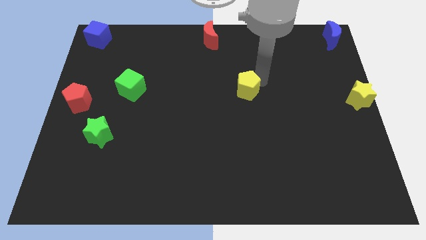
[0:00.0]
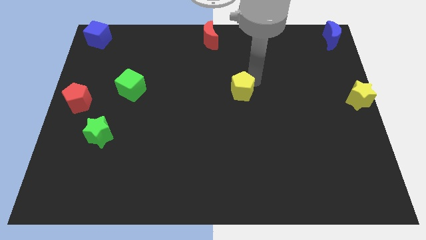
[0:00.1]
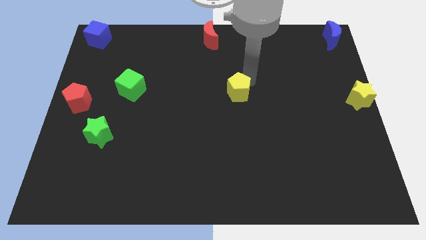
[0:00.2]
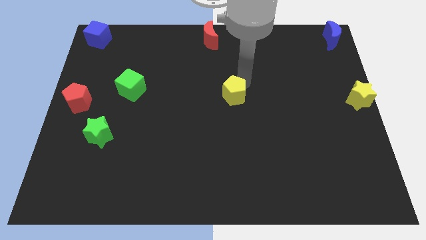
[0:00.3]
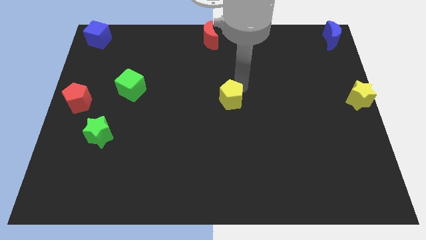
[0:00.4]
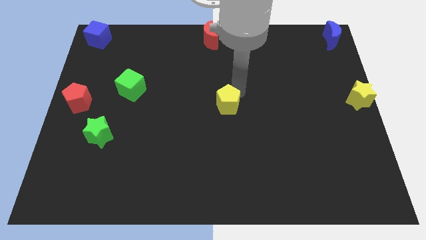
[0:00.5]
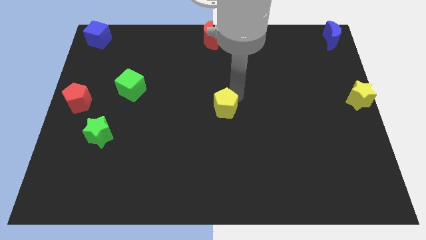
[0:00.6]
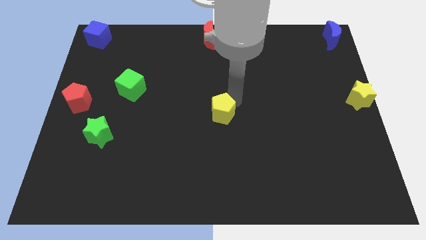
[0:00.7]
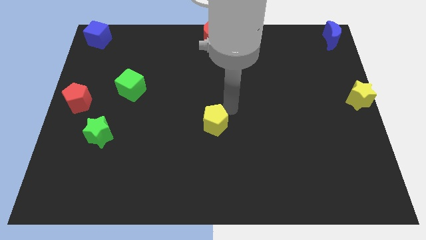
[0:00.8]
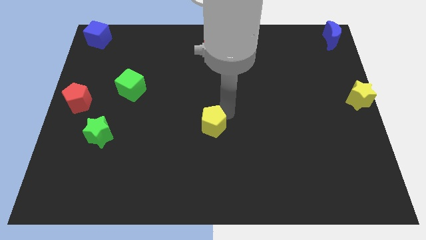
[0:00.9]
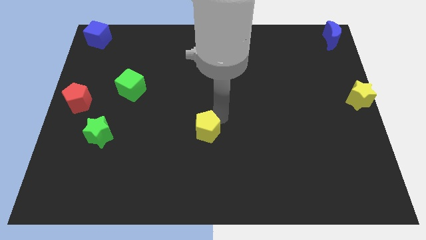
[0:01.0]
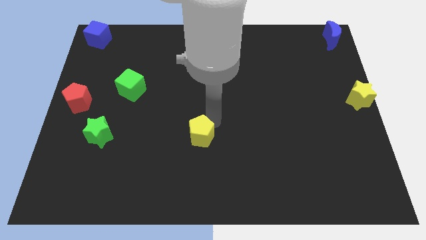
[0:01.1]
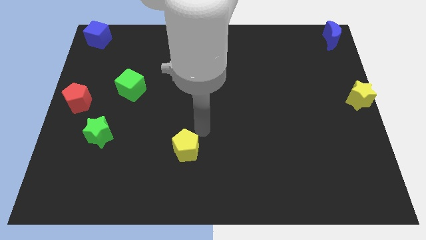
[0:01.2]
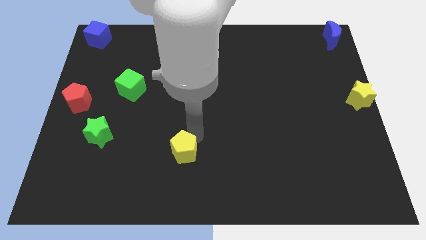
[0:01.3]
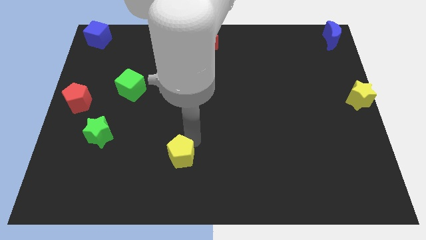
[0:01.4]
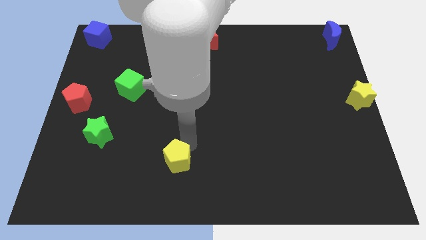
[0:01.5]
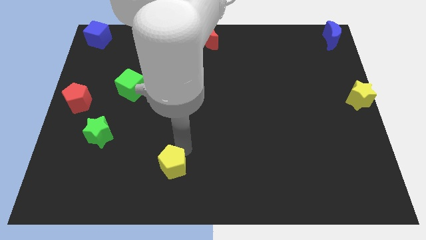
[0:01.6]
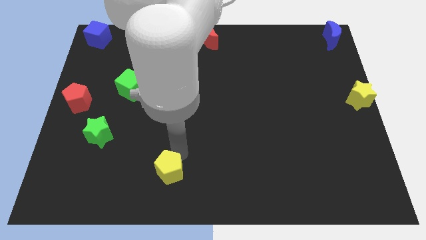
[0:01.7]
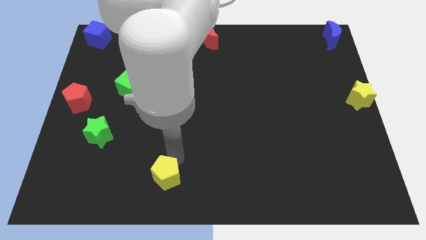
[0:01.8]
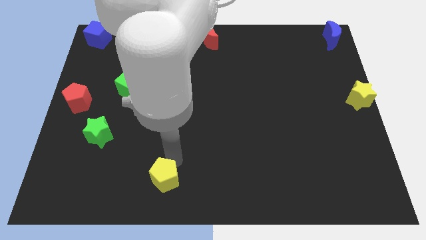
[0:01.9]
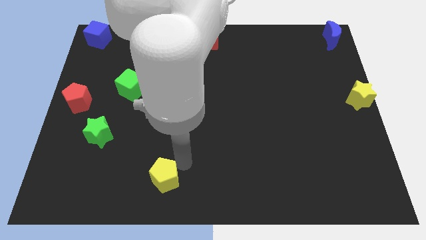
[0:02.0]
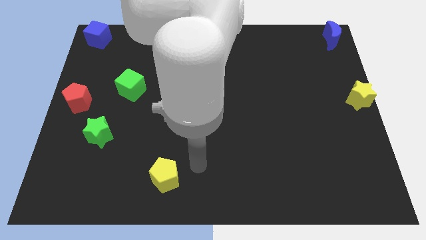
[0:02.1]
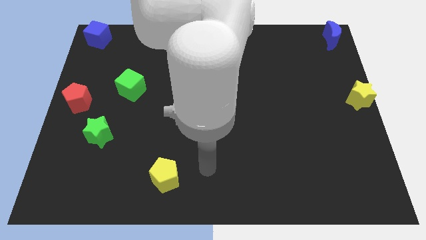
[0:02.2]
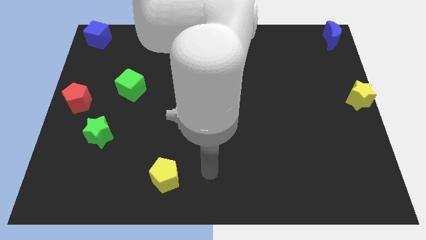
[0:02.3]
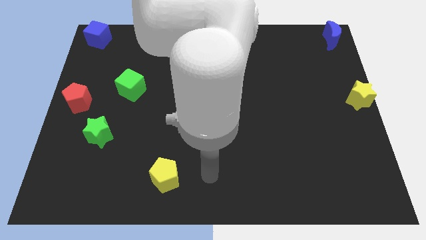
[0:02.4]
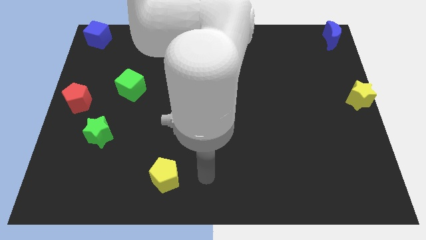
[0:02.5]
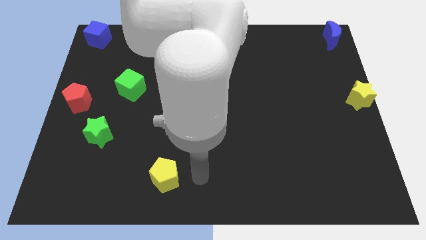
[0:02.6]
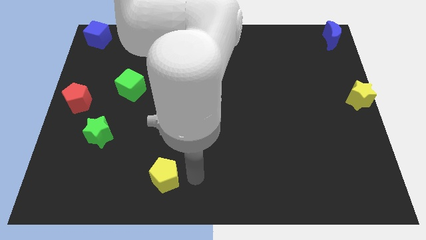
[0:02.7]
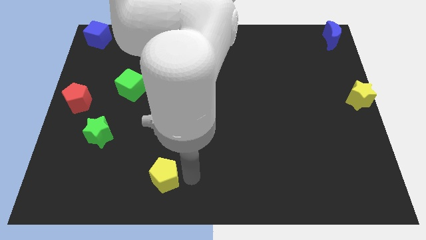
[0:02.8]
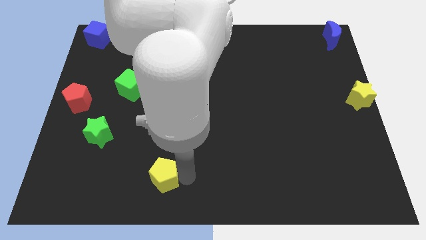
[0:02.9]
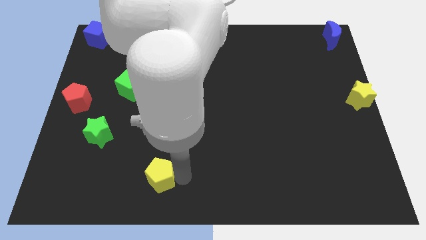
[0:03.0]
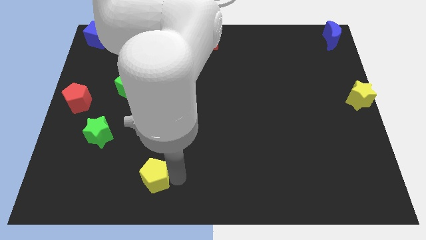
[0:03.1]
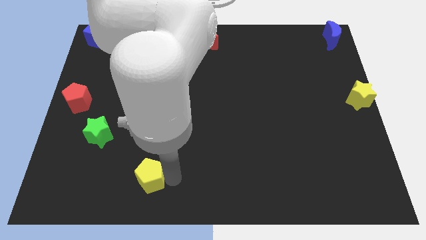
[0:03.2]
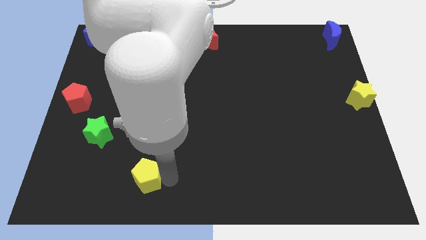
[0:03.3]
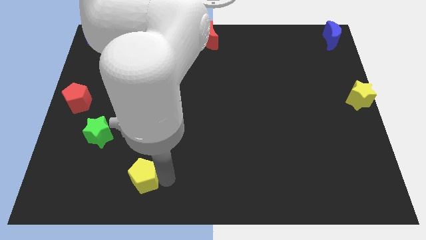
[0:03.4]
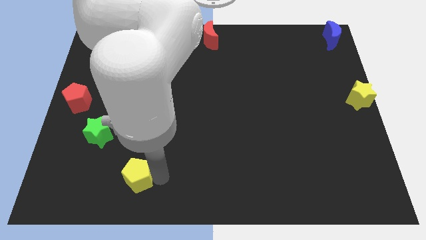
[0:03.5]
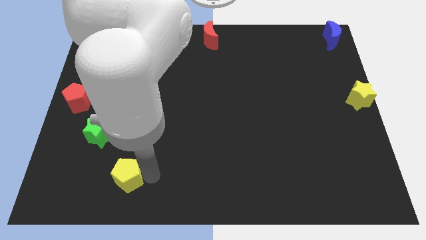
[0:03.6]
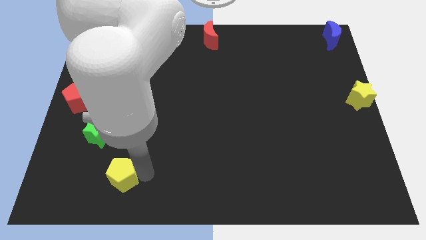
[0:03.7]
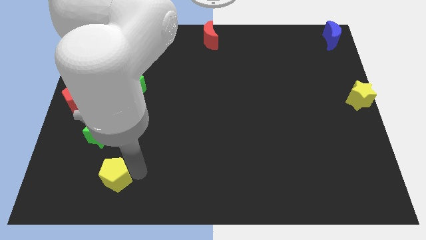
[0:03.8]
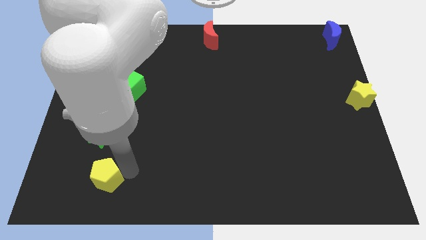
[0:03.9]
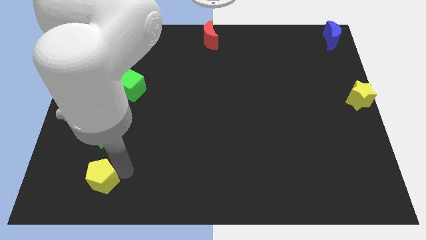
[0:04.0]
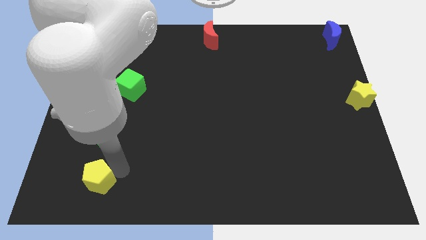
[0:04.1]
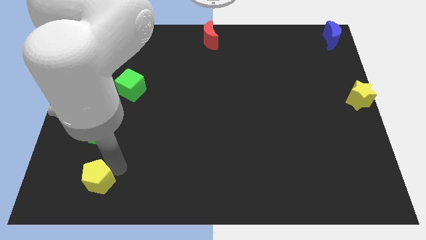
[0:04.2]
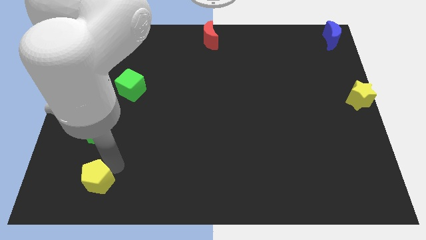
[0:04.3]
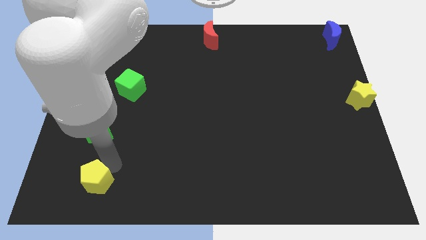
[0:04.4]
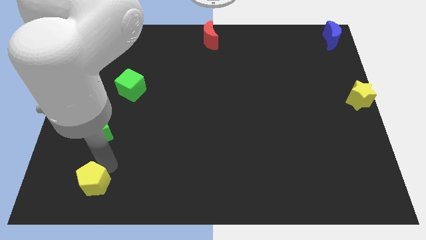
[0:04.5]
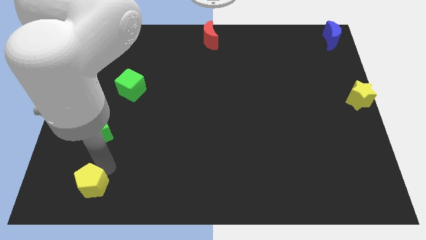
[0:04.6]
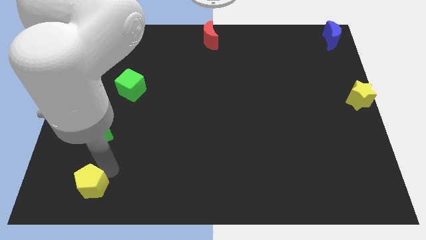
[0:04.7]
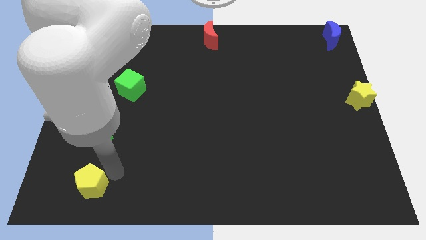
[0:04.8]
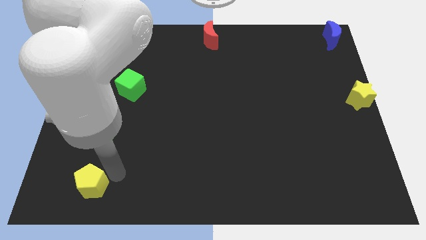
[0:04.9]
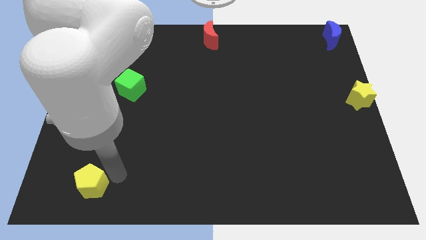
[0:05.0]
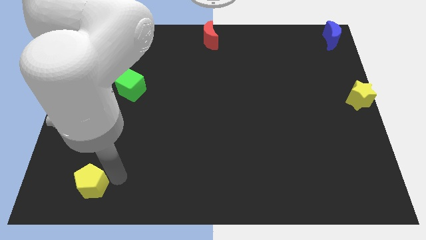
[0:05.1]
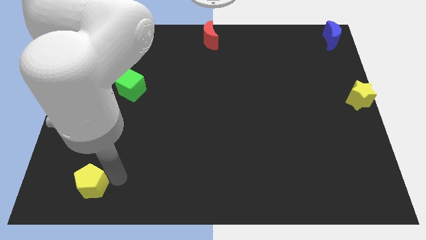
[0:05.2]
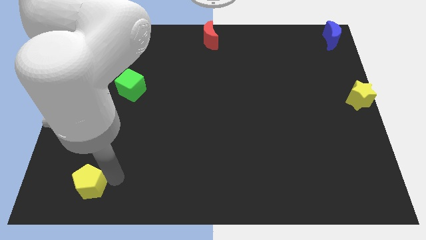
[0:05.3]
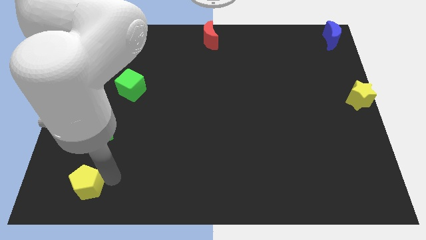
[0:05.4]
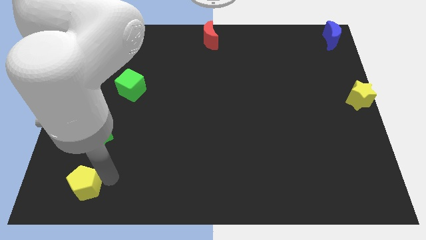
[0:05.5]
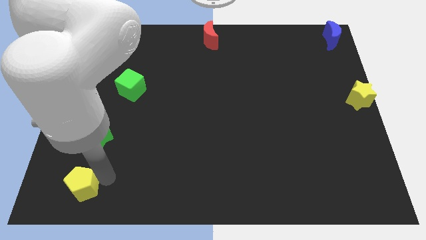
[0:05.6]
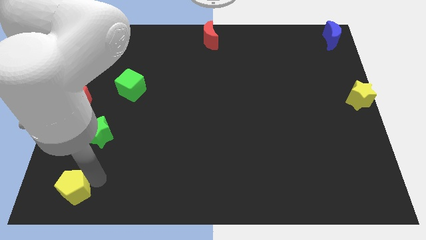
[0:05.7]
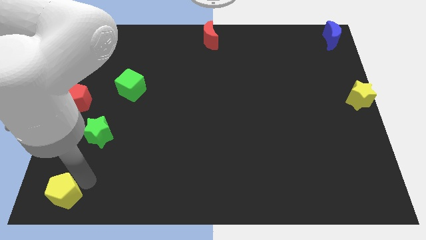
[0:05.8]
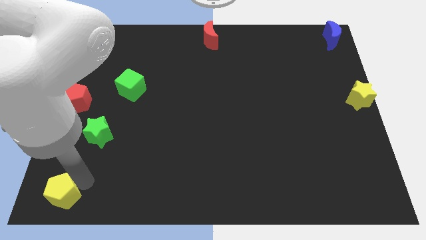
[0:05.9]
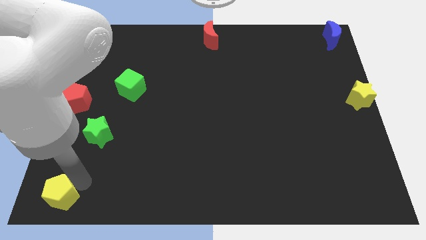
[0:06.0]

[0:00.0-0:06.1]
place the yellow pentagon below the green star

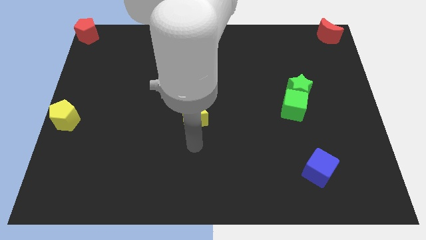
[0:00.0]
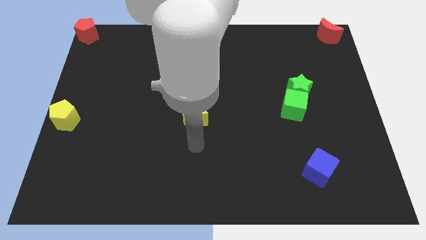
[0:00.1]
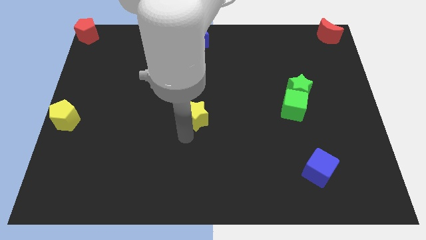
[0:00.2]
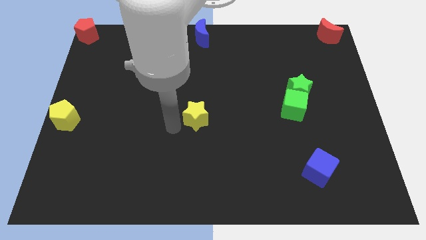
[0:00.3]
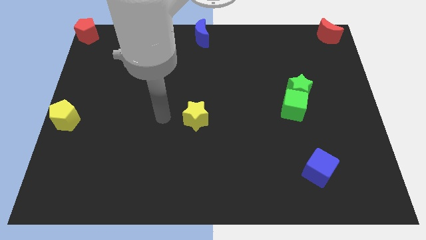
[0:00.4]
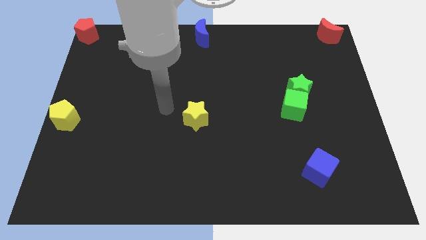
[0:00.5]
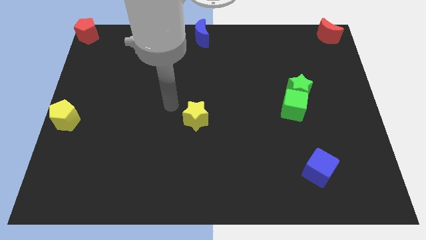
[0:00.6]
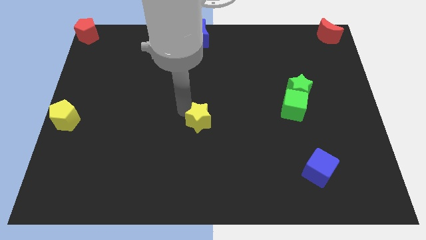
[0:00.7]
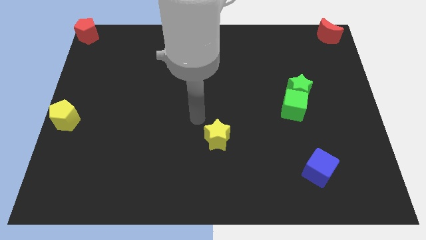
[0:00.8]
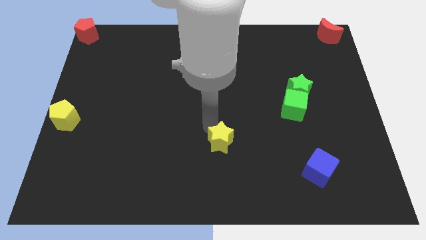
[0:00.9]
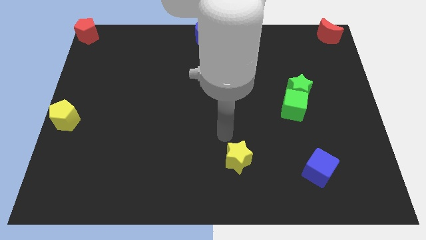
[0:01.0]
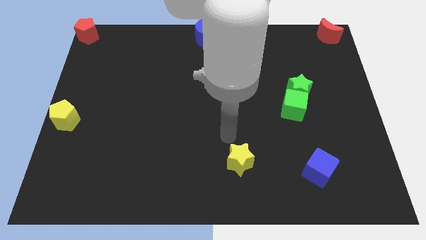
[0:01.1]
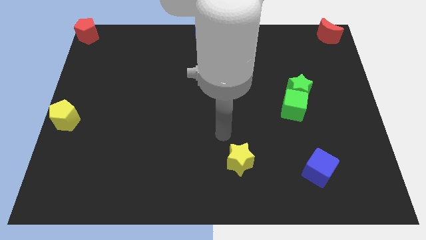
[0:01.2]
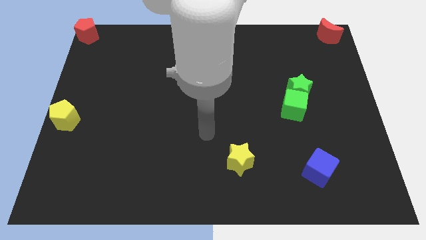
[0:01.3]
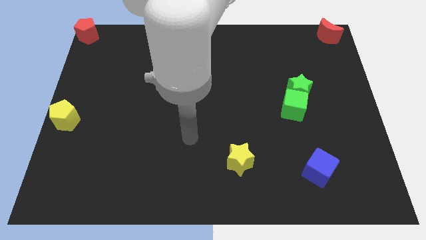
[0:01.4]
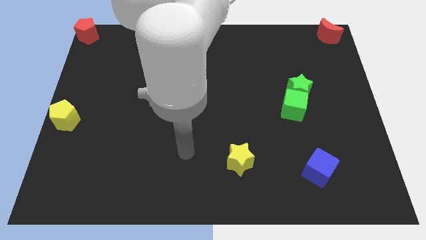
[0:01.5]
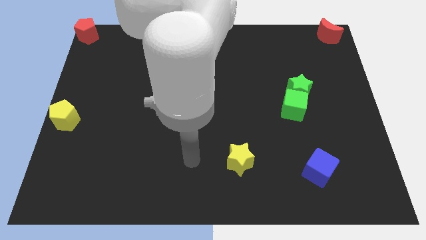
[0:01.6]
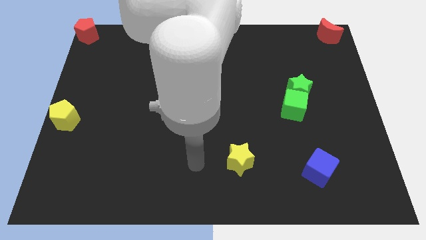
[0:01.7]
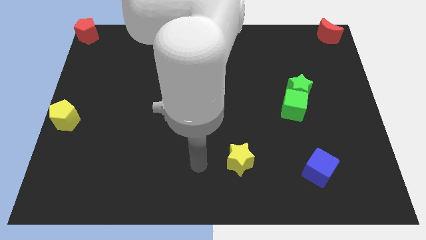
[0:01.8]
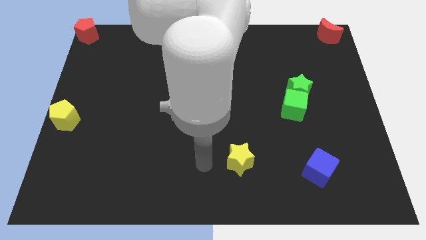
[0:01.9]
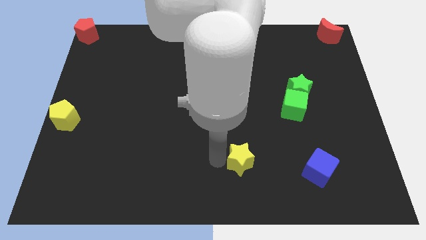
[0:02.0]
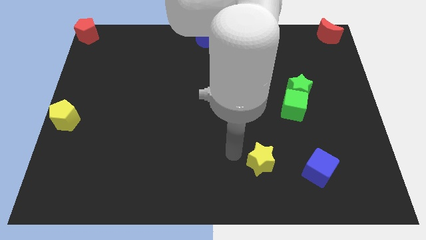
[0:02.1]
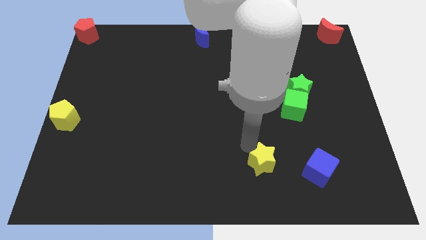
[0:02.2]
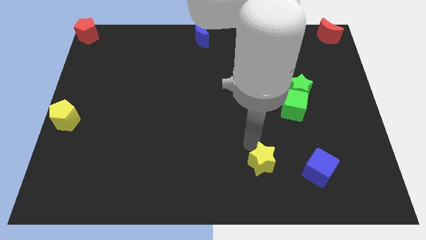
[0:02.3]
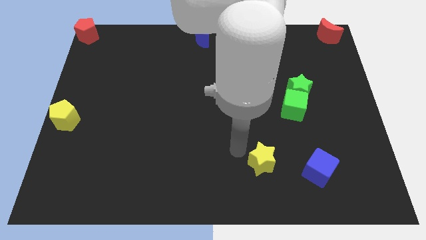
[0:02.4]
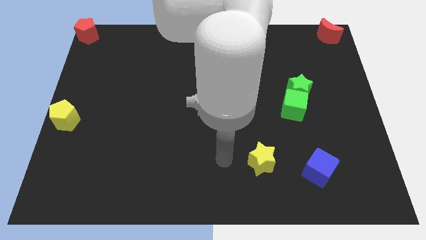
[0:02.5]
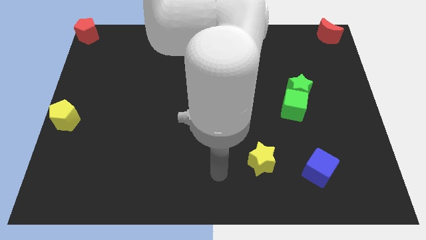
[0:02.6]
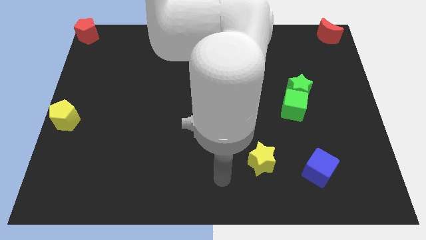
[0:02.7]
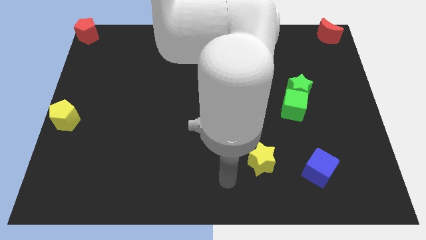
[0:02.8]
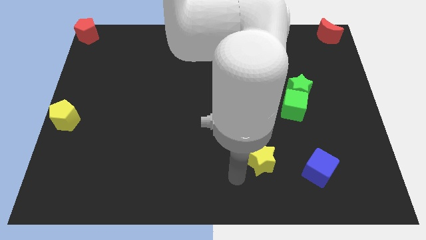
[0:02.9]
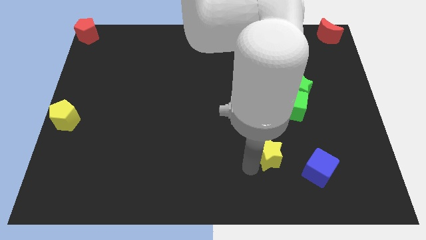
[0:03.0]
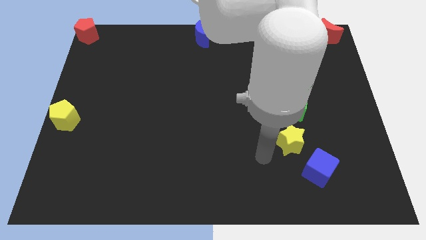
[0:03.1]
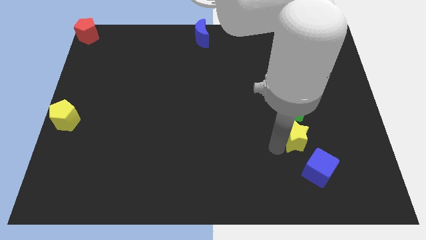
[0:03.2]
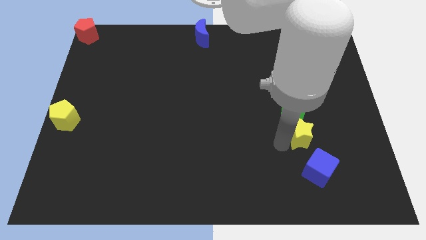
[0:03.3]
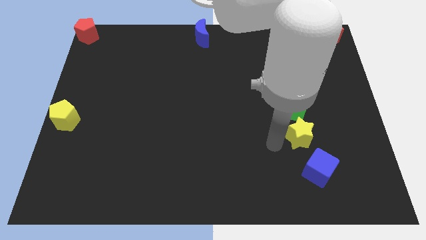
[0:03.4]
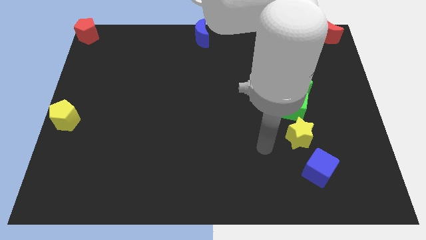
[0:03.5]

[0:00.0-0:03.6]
push yellow star below green cube
